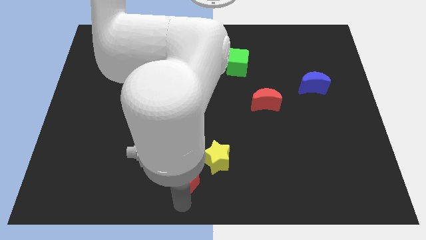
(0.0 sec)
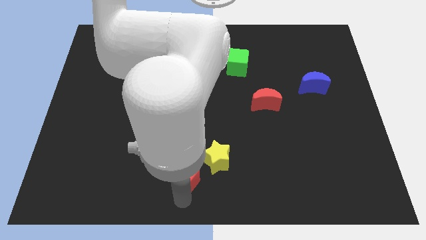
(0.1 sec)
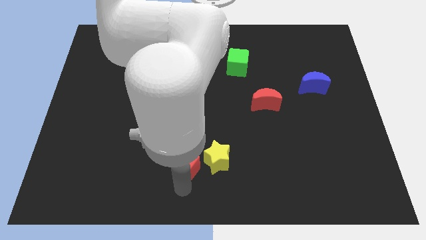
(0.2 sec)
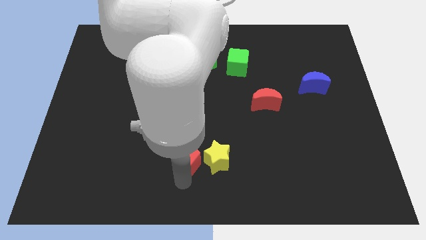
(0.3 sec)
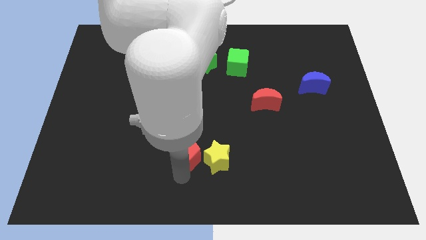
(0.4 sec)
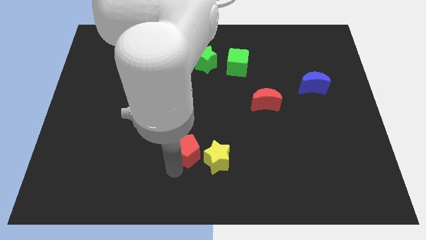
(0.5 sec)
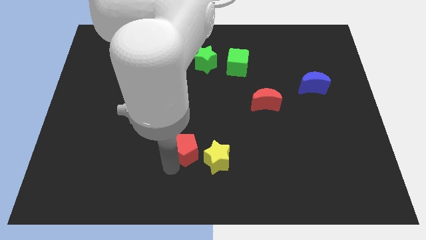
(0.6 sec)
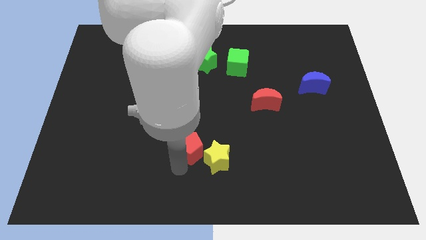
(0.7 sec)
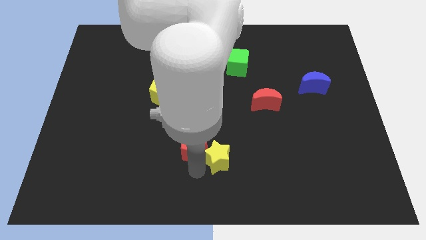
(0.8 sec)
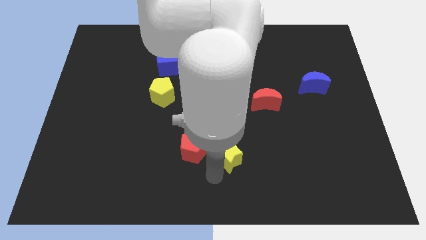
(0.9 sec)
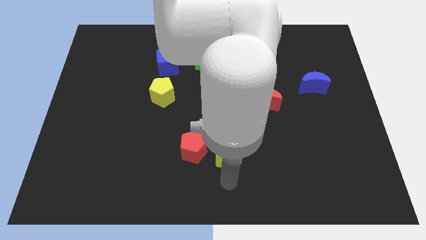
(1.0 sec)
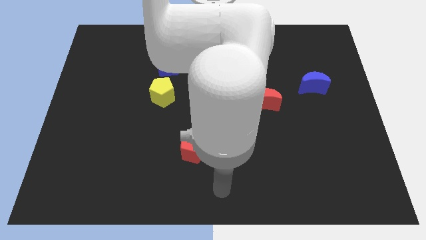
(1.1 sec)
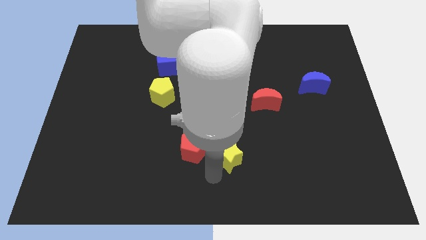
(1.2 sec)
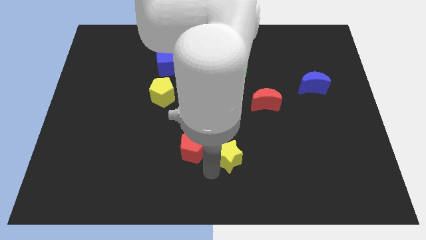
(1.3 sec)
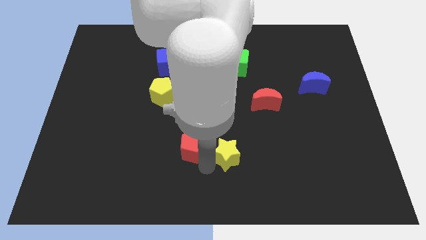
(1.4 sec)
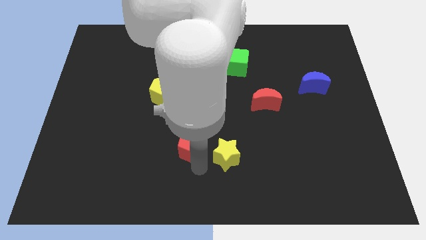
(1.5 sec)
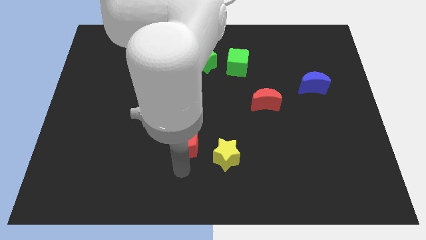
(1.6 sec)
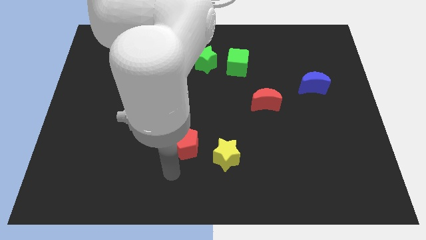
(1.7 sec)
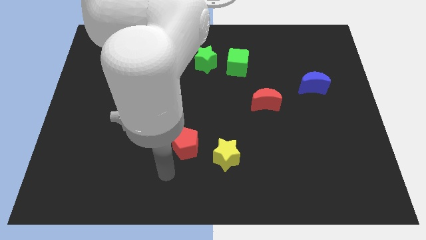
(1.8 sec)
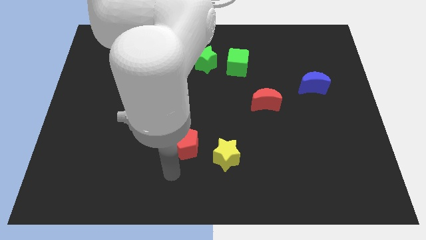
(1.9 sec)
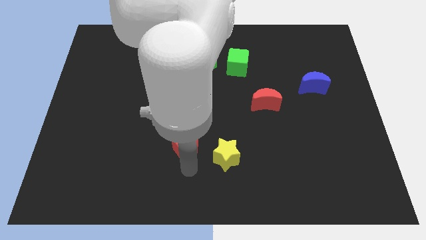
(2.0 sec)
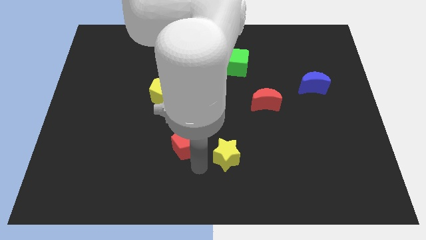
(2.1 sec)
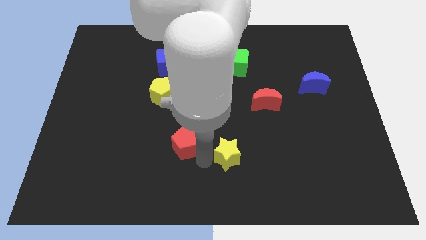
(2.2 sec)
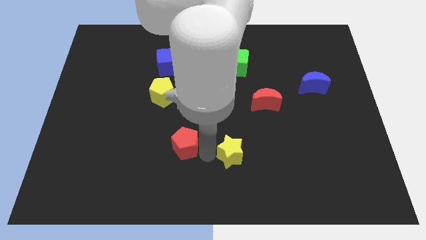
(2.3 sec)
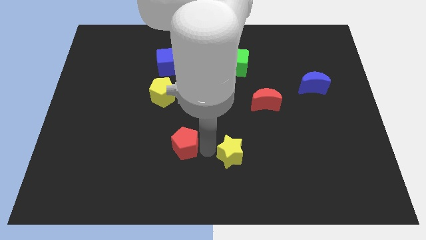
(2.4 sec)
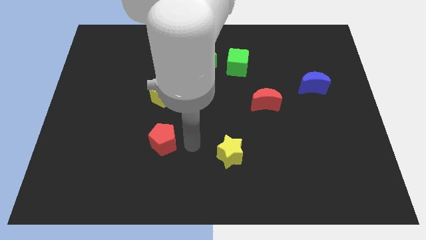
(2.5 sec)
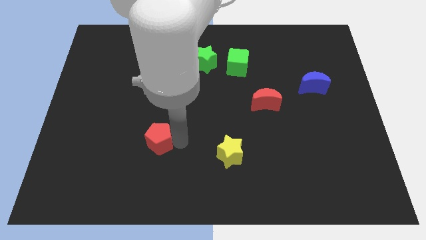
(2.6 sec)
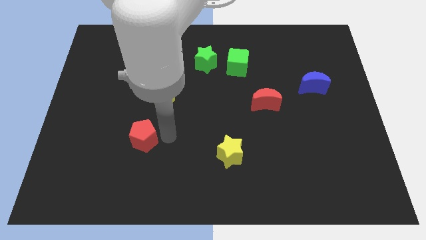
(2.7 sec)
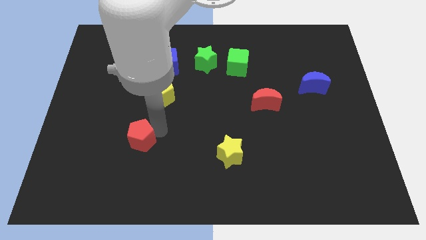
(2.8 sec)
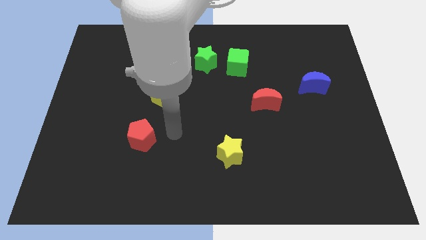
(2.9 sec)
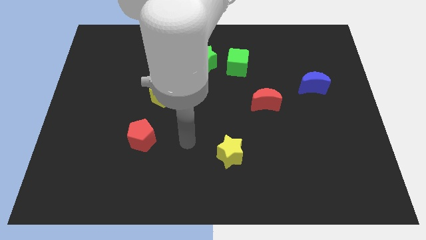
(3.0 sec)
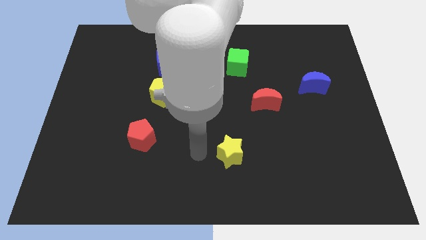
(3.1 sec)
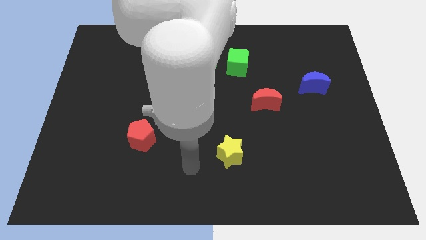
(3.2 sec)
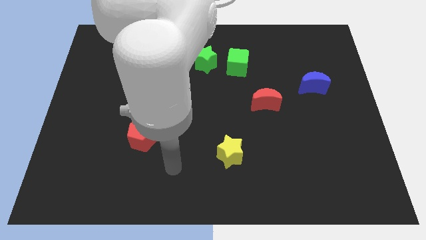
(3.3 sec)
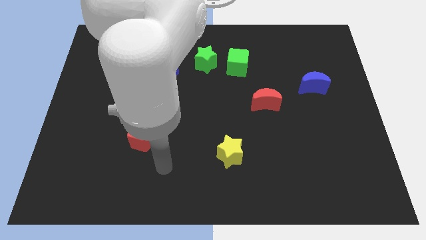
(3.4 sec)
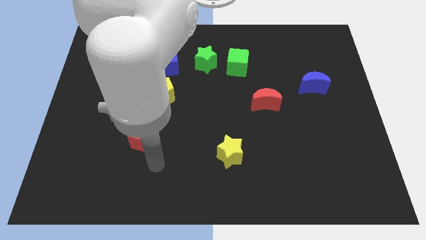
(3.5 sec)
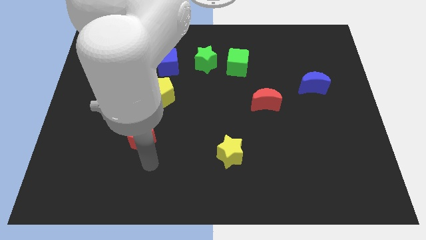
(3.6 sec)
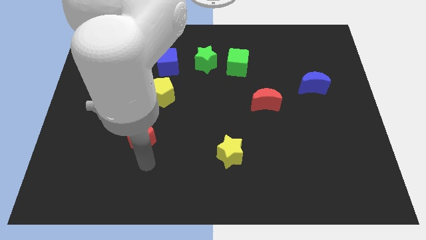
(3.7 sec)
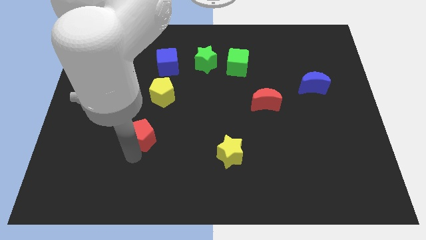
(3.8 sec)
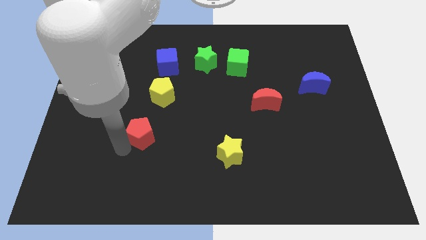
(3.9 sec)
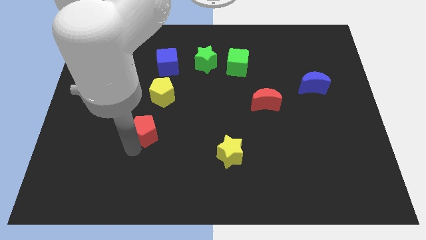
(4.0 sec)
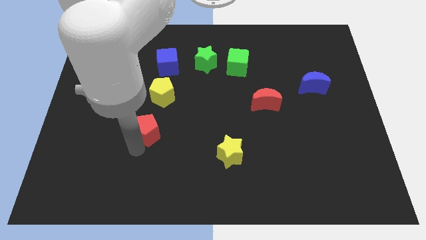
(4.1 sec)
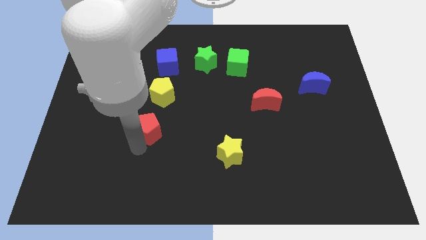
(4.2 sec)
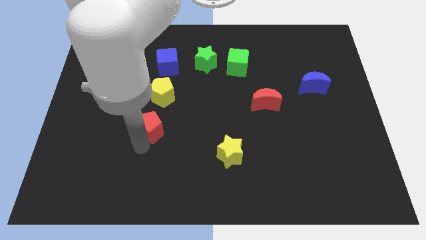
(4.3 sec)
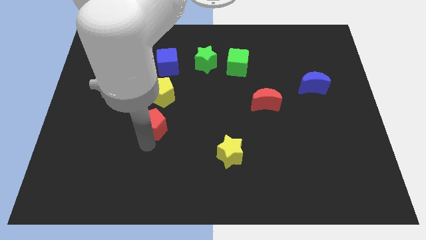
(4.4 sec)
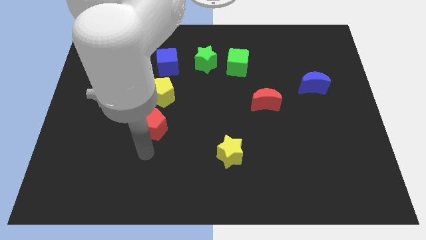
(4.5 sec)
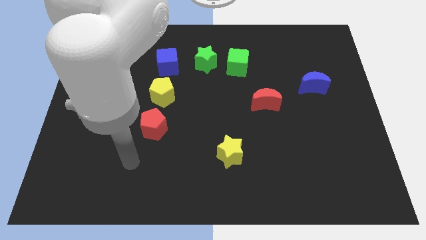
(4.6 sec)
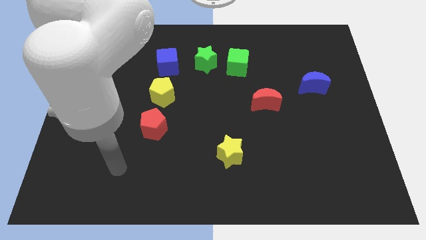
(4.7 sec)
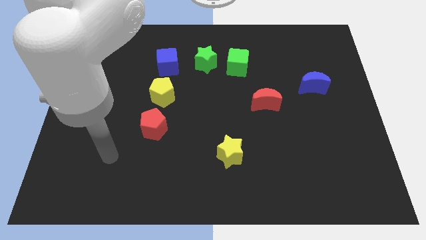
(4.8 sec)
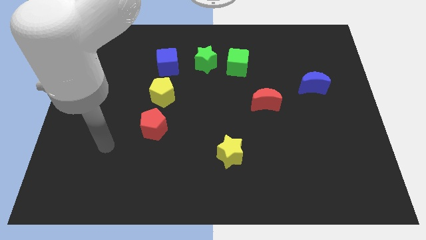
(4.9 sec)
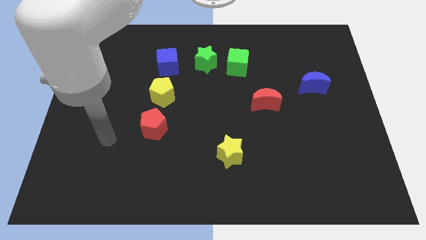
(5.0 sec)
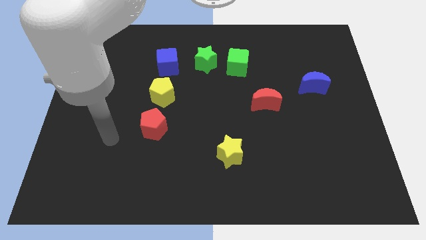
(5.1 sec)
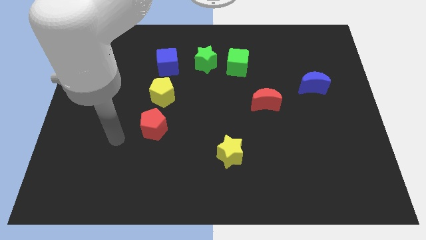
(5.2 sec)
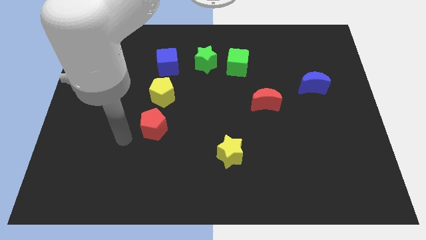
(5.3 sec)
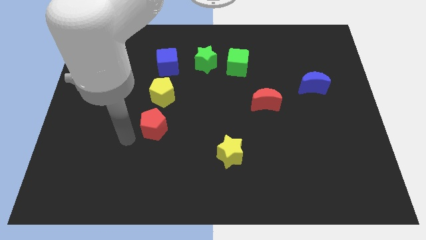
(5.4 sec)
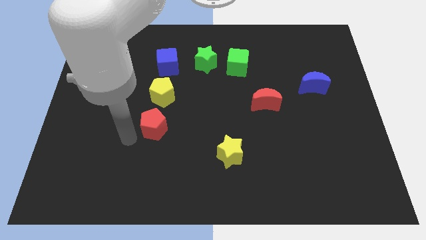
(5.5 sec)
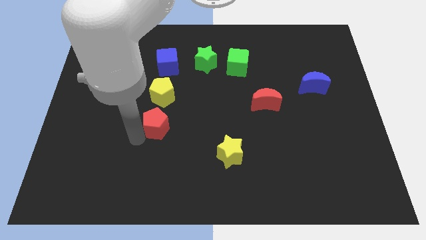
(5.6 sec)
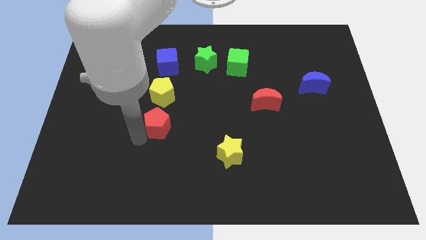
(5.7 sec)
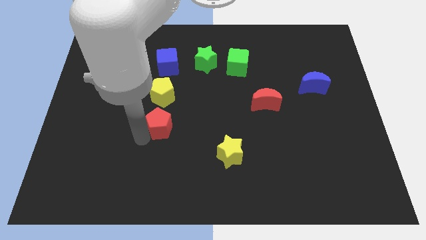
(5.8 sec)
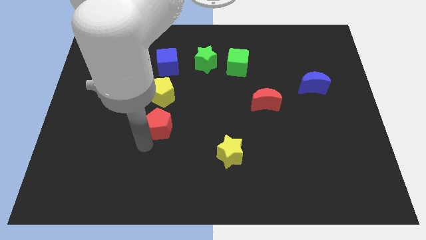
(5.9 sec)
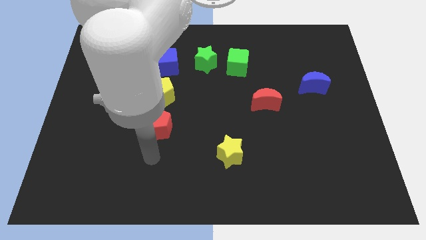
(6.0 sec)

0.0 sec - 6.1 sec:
push the red pentagon to the bottom of yellow pentagon

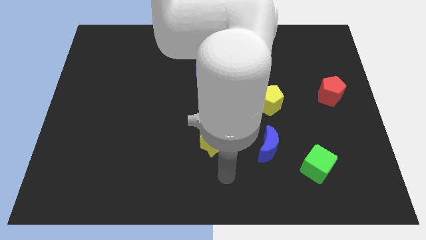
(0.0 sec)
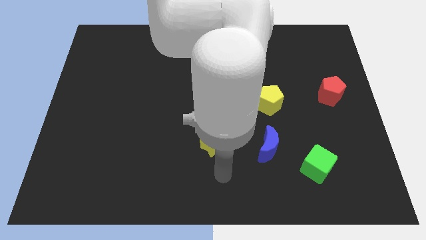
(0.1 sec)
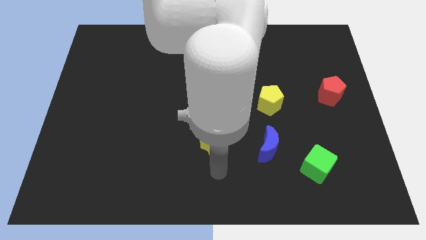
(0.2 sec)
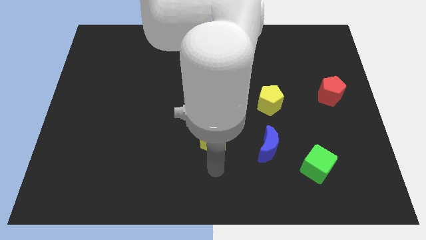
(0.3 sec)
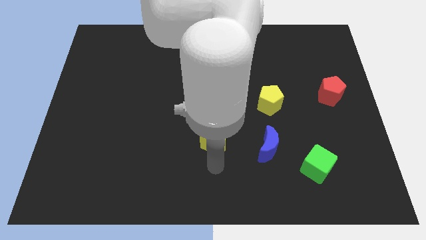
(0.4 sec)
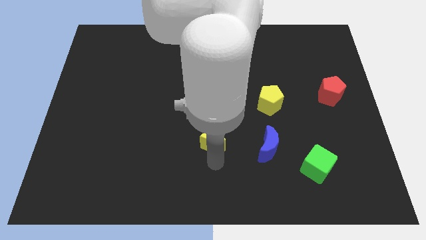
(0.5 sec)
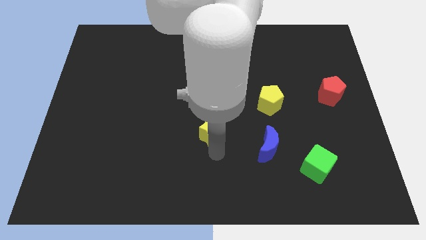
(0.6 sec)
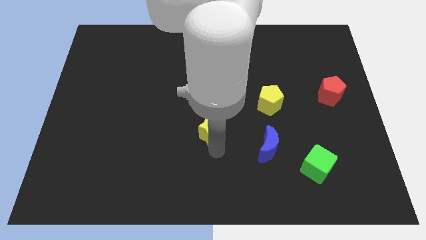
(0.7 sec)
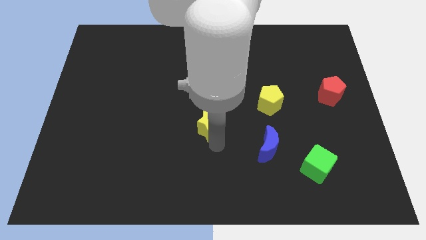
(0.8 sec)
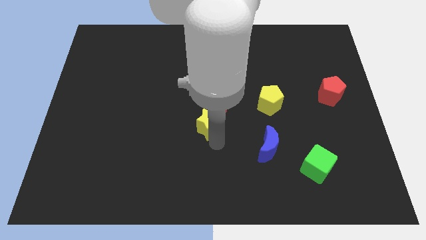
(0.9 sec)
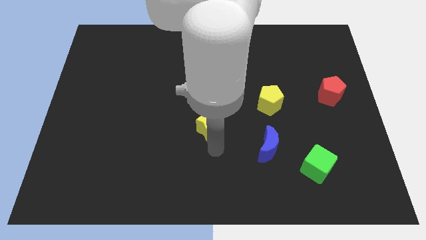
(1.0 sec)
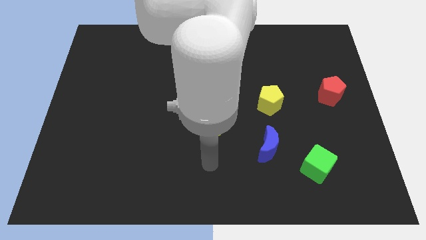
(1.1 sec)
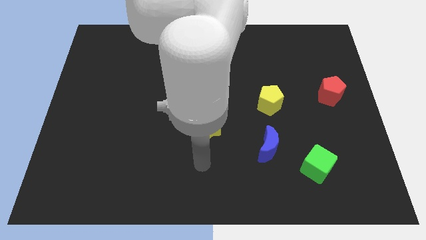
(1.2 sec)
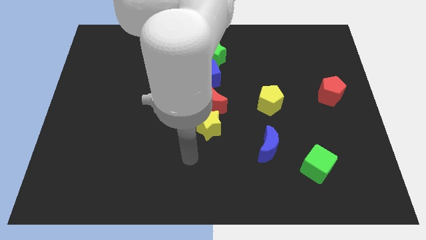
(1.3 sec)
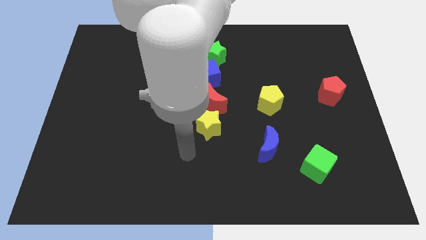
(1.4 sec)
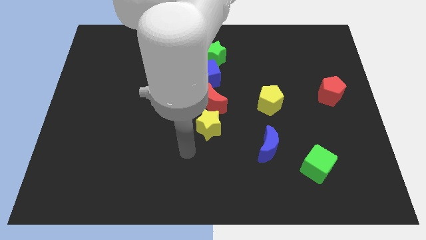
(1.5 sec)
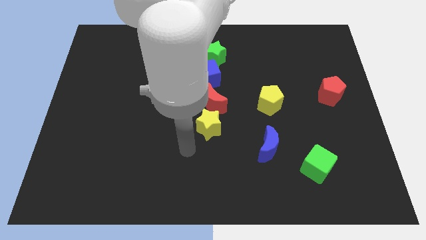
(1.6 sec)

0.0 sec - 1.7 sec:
place the yellow star below the red crescent

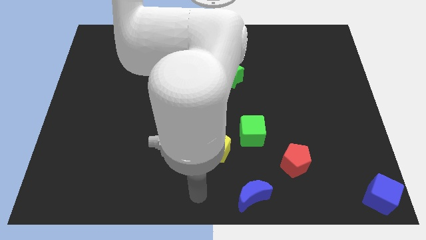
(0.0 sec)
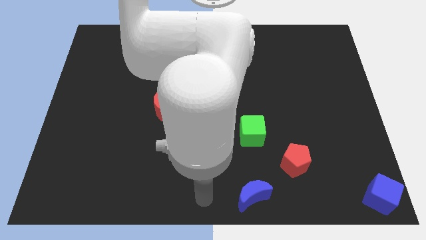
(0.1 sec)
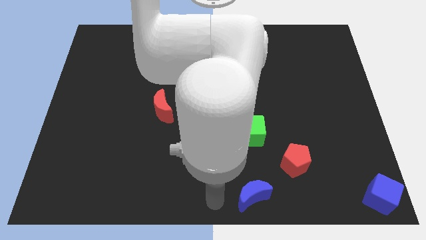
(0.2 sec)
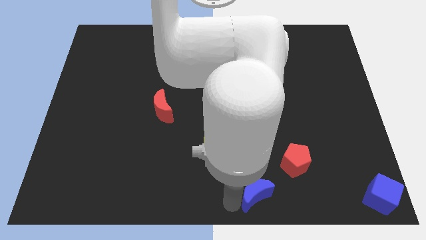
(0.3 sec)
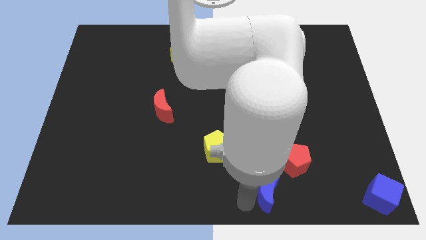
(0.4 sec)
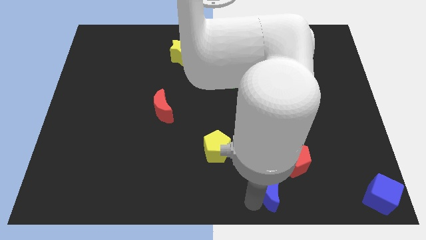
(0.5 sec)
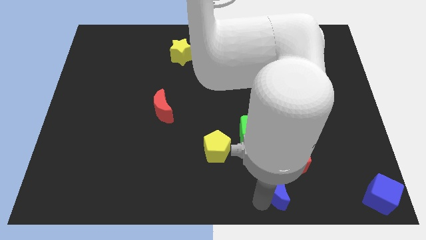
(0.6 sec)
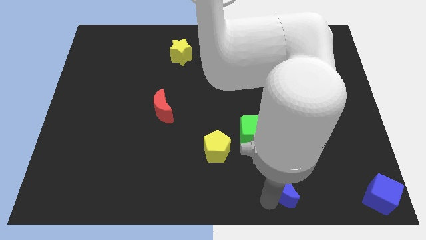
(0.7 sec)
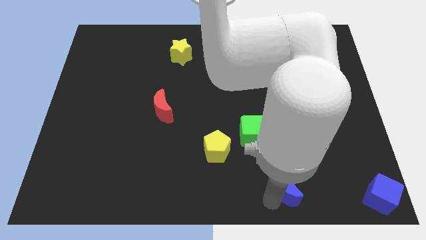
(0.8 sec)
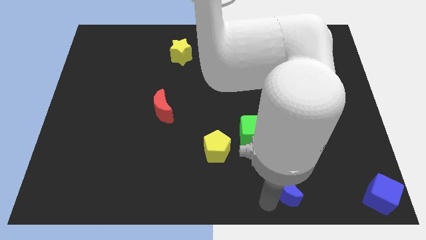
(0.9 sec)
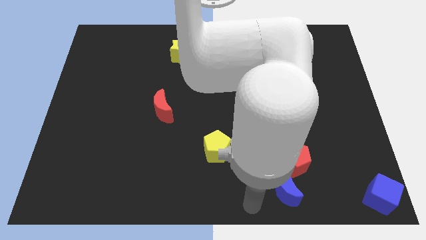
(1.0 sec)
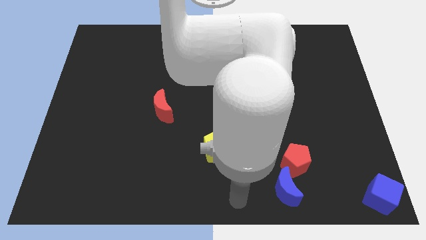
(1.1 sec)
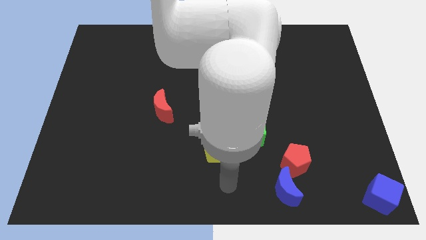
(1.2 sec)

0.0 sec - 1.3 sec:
place the blue crescent below the red pentagon
